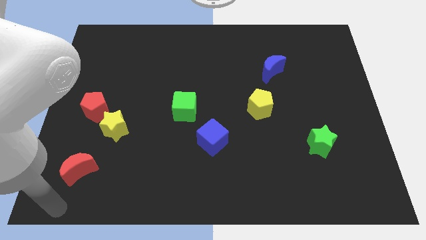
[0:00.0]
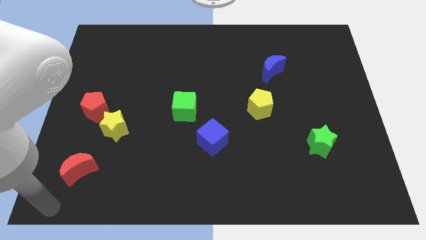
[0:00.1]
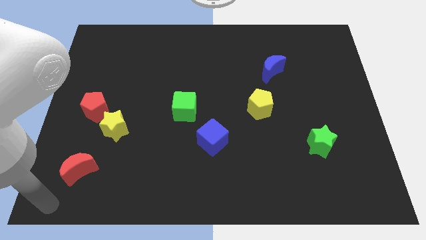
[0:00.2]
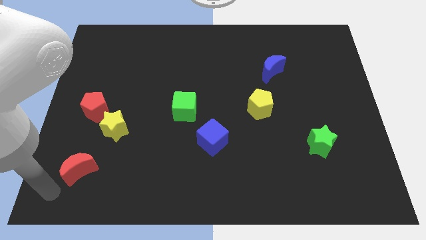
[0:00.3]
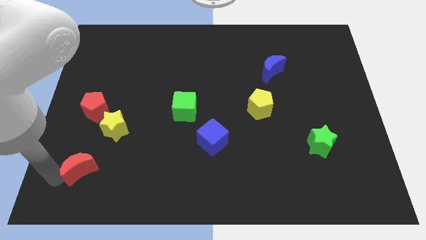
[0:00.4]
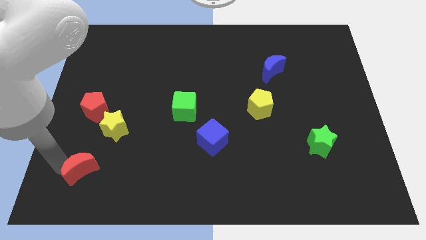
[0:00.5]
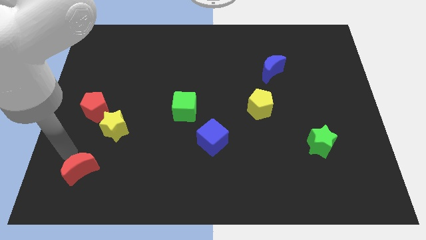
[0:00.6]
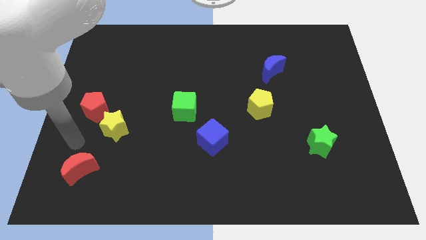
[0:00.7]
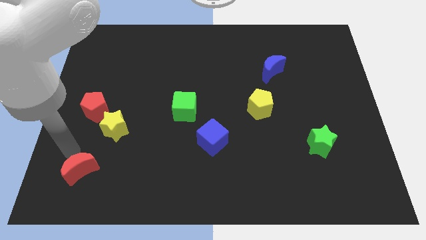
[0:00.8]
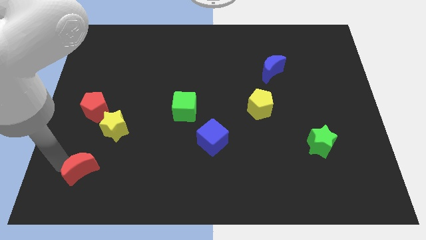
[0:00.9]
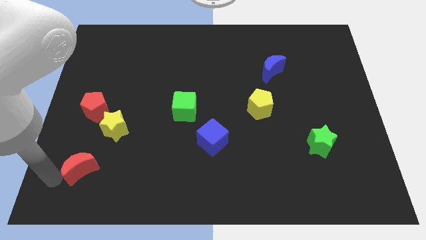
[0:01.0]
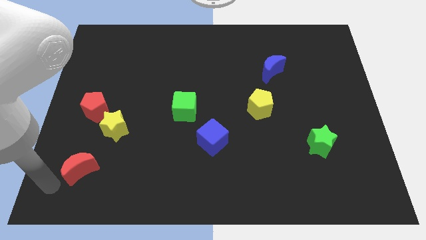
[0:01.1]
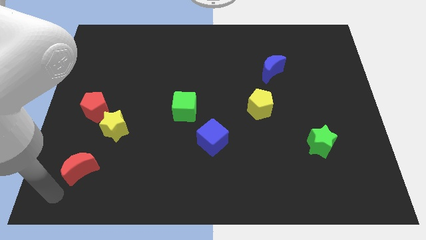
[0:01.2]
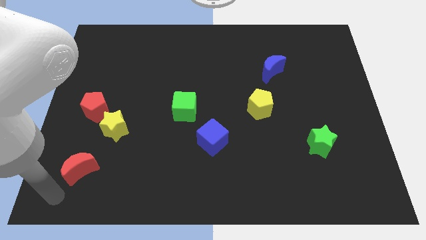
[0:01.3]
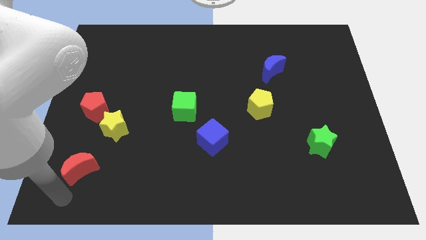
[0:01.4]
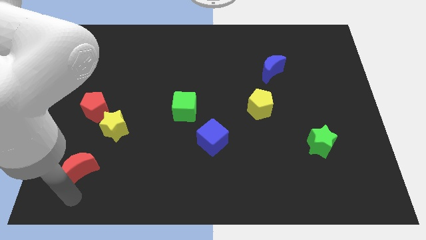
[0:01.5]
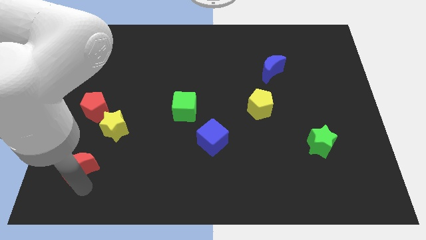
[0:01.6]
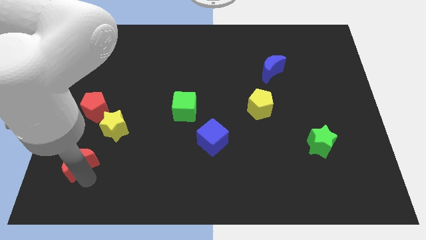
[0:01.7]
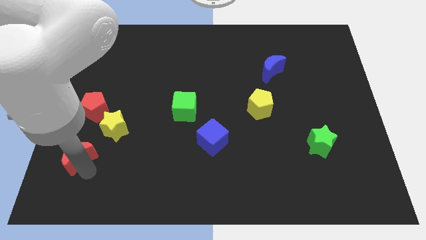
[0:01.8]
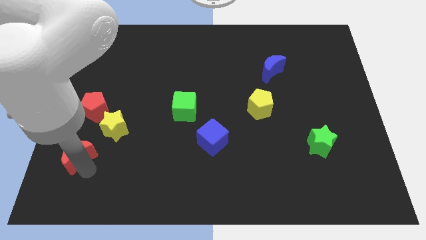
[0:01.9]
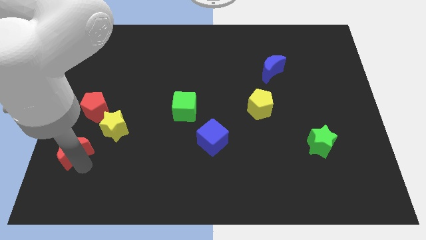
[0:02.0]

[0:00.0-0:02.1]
move the red crescent towards top

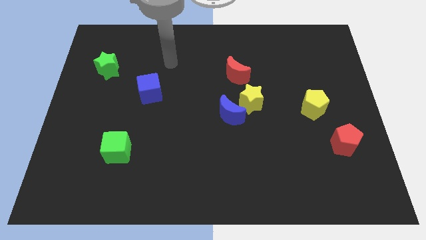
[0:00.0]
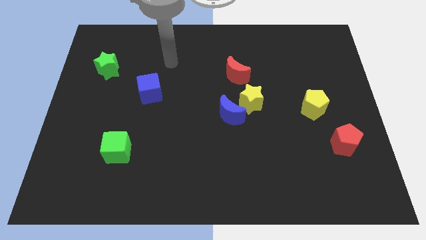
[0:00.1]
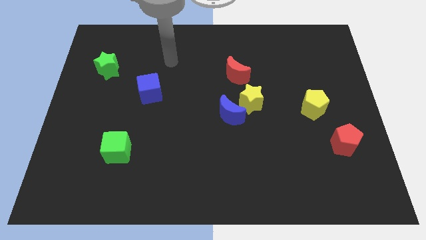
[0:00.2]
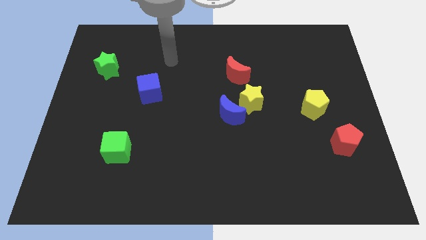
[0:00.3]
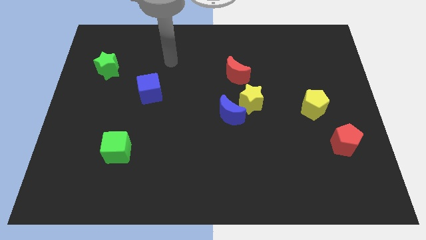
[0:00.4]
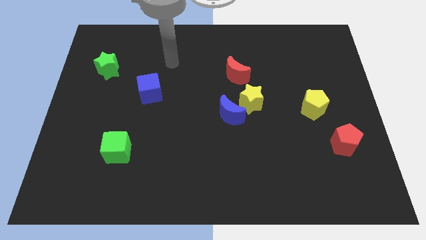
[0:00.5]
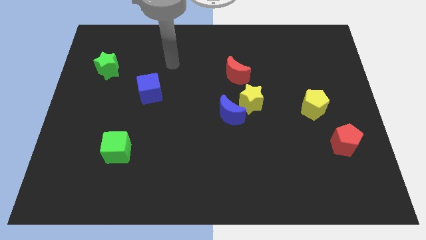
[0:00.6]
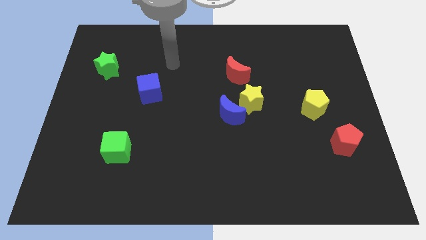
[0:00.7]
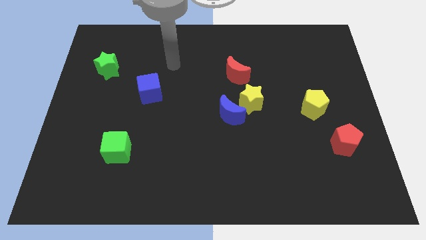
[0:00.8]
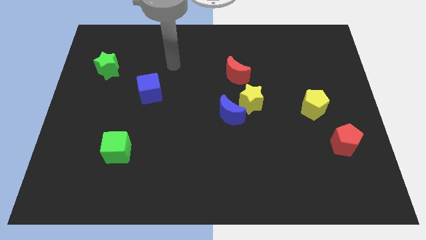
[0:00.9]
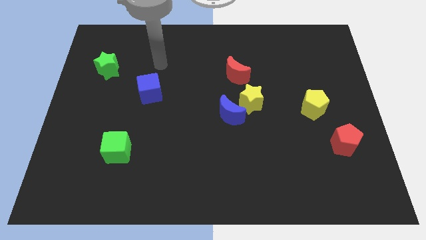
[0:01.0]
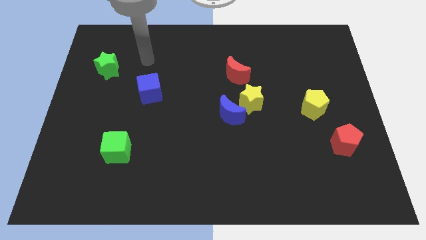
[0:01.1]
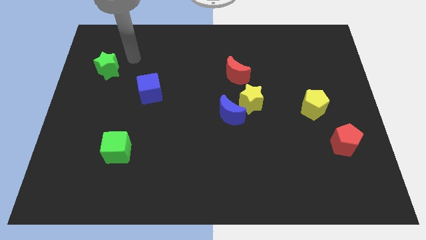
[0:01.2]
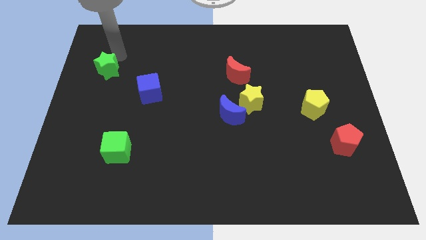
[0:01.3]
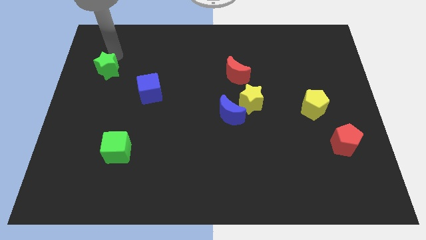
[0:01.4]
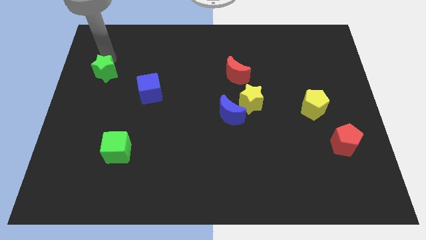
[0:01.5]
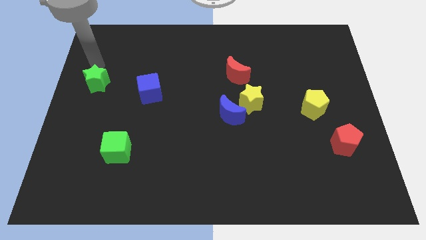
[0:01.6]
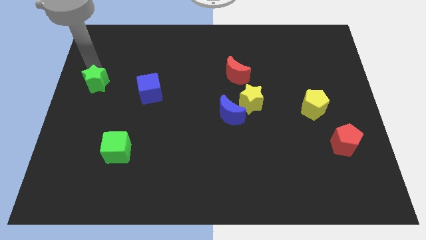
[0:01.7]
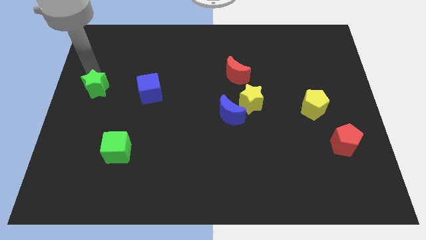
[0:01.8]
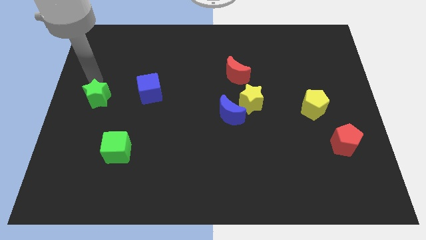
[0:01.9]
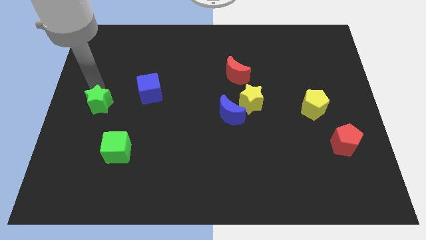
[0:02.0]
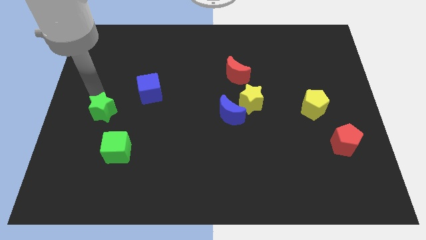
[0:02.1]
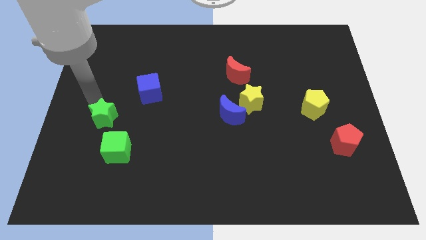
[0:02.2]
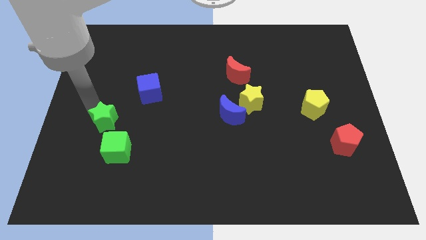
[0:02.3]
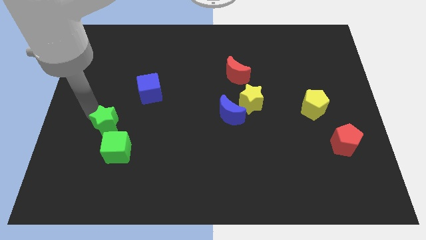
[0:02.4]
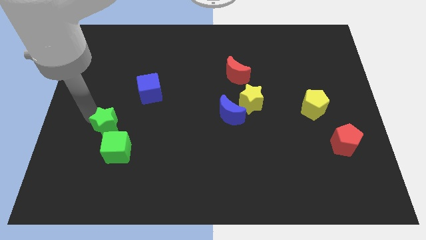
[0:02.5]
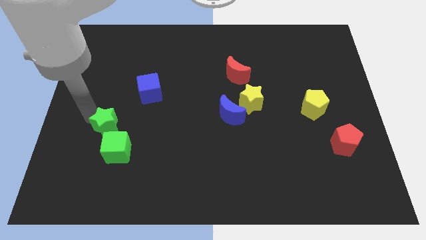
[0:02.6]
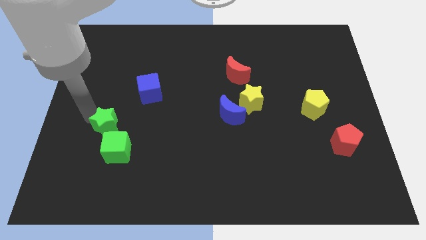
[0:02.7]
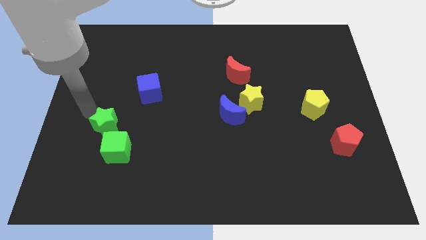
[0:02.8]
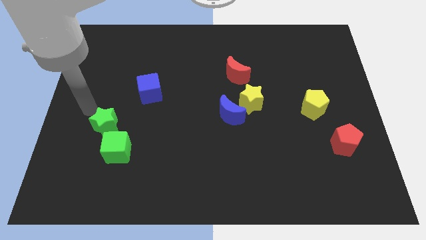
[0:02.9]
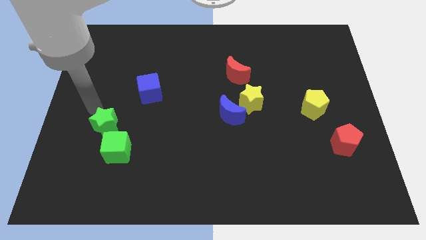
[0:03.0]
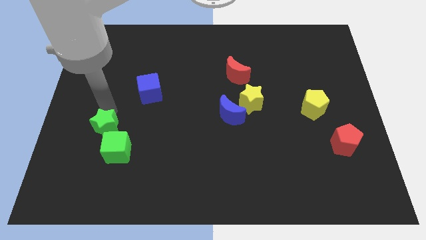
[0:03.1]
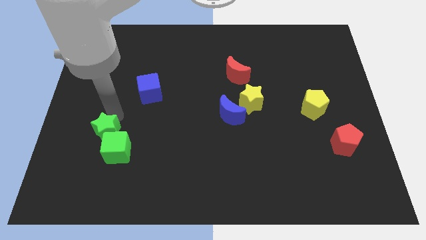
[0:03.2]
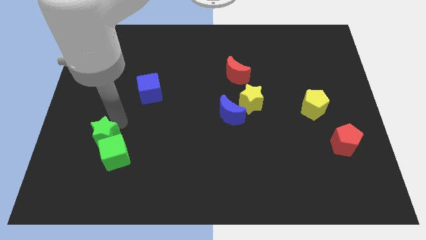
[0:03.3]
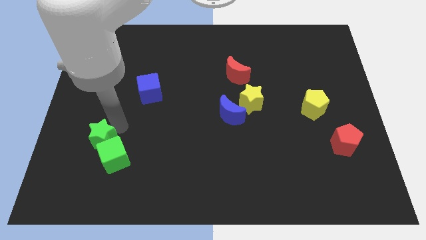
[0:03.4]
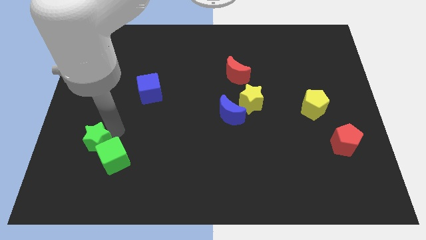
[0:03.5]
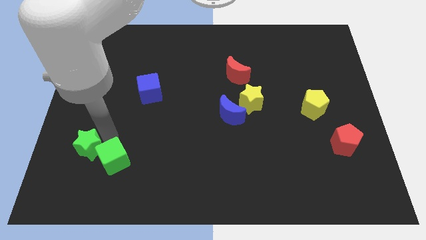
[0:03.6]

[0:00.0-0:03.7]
push the green star into the green cube

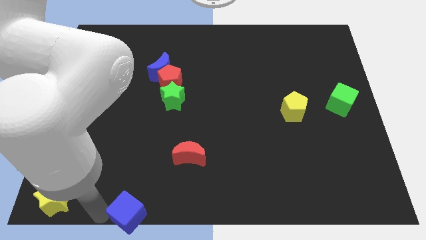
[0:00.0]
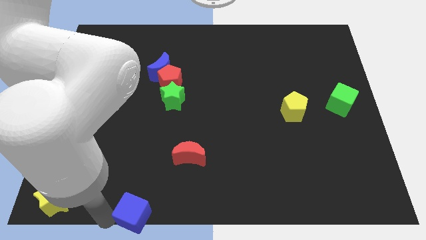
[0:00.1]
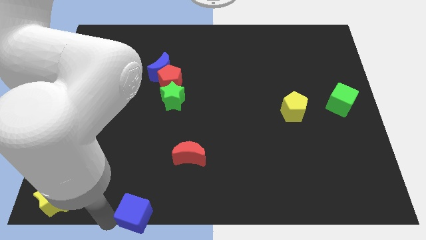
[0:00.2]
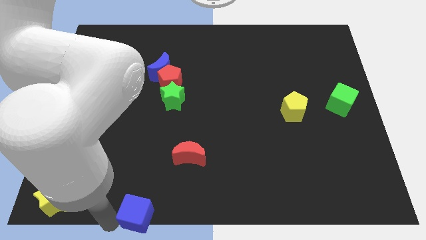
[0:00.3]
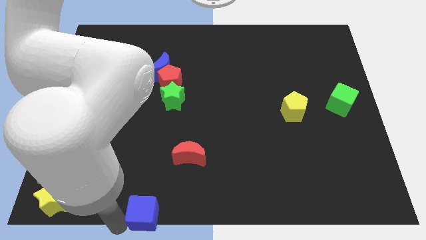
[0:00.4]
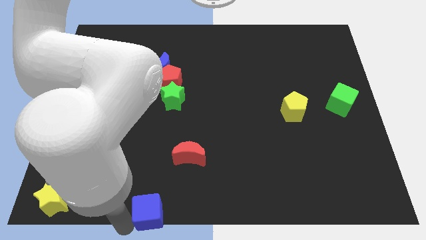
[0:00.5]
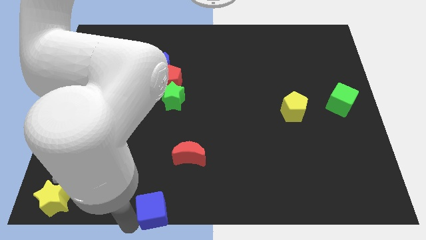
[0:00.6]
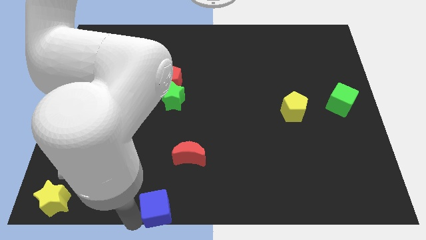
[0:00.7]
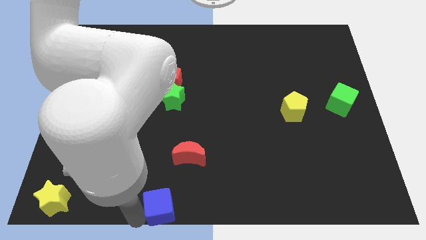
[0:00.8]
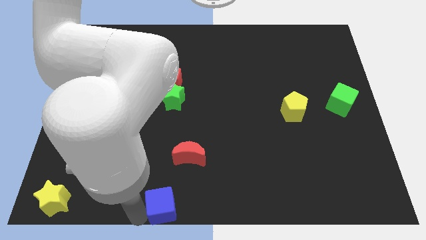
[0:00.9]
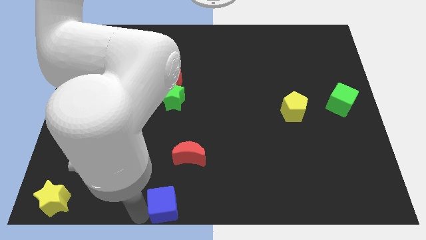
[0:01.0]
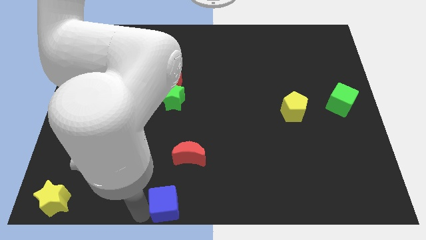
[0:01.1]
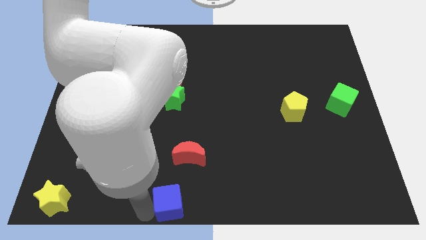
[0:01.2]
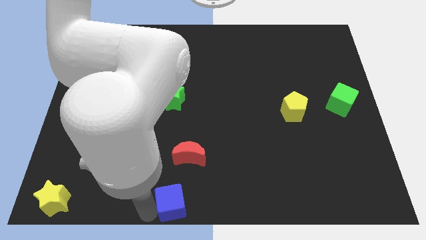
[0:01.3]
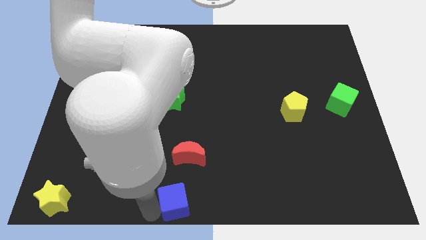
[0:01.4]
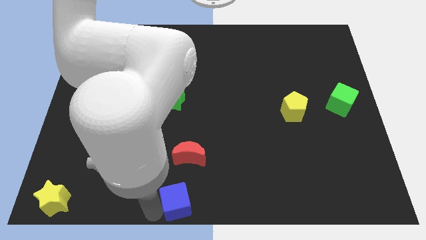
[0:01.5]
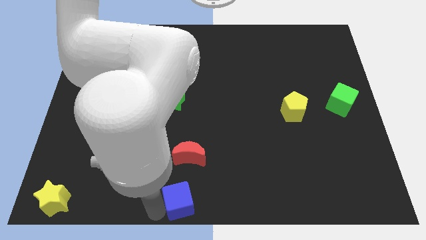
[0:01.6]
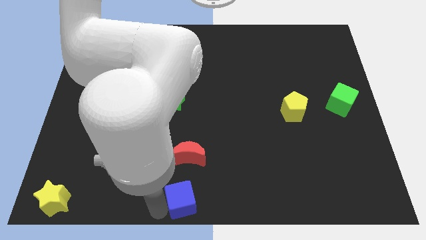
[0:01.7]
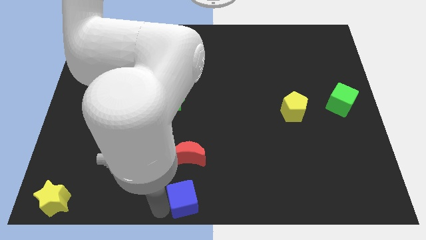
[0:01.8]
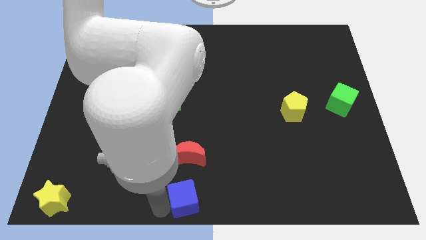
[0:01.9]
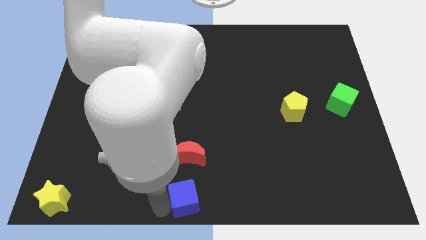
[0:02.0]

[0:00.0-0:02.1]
move blue cube to the bottom center

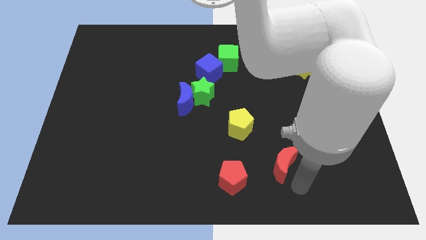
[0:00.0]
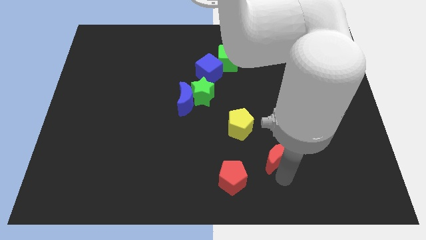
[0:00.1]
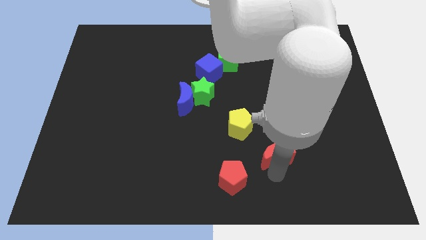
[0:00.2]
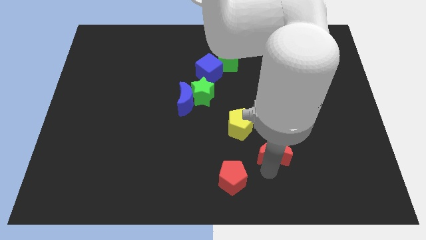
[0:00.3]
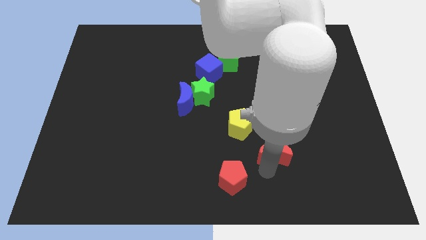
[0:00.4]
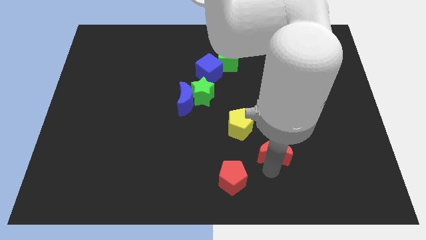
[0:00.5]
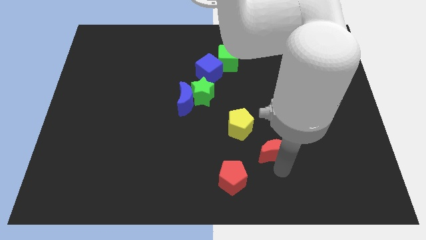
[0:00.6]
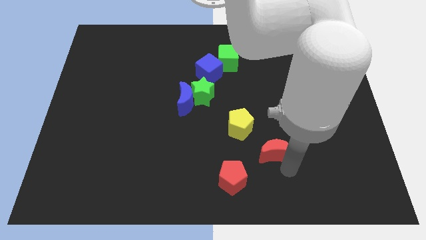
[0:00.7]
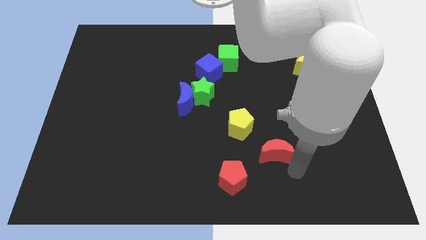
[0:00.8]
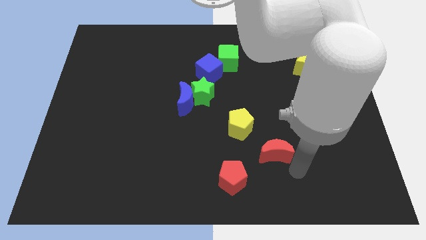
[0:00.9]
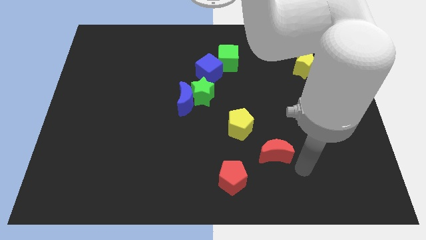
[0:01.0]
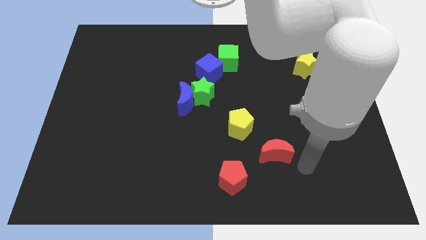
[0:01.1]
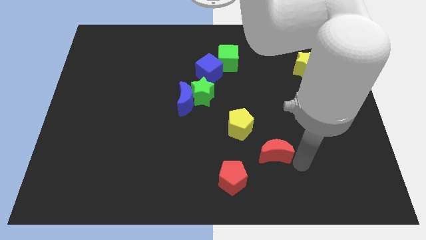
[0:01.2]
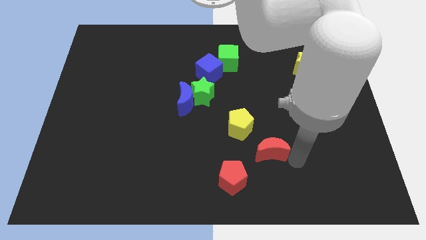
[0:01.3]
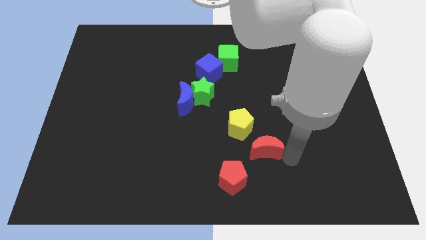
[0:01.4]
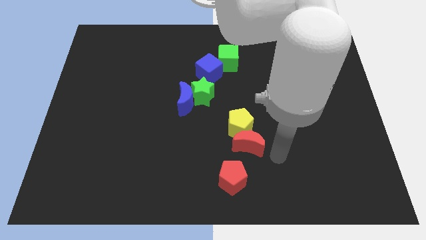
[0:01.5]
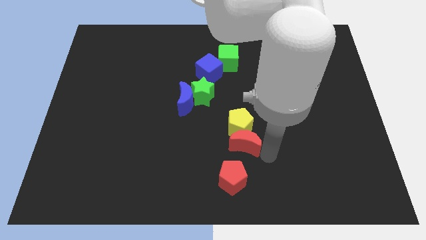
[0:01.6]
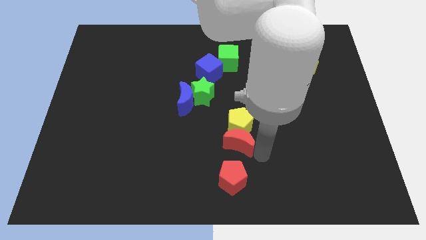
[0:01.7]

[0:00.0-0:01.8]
place the red crescent vertically below the yellow pentagon
